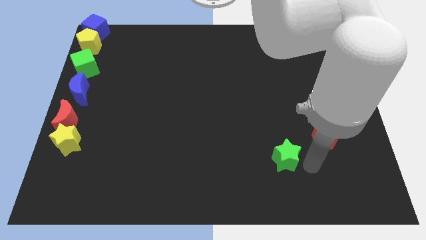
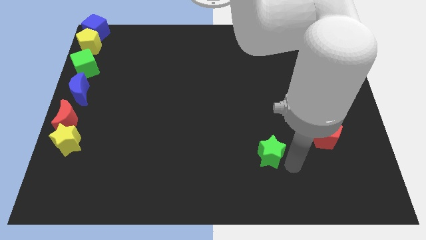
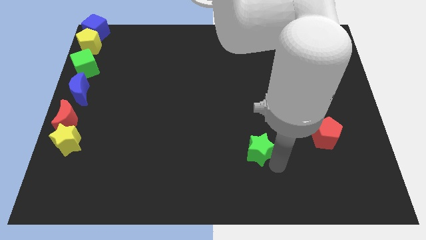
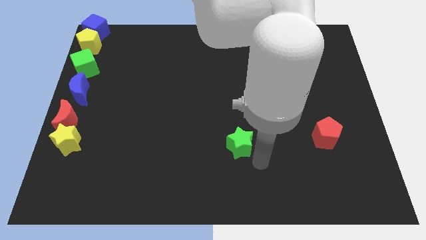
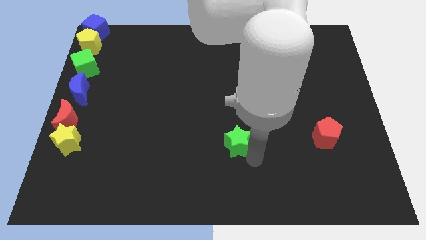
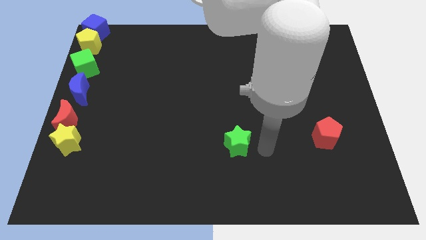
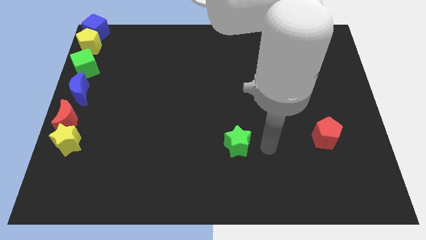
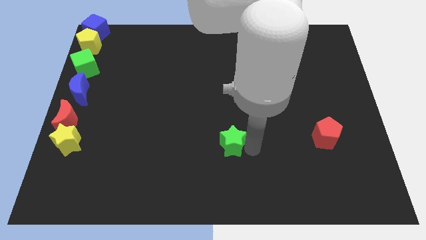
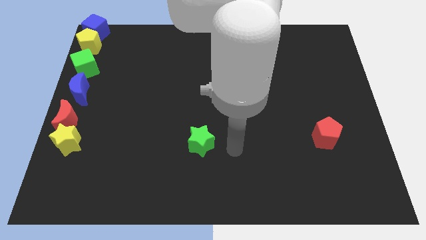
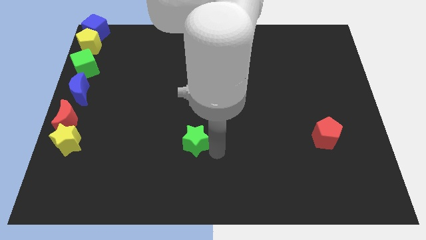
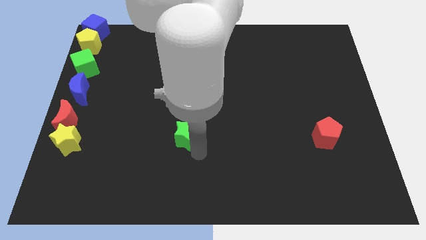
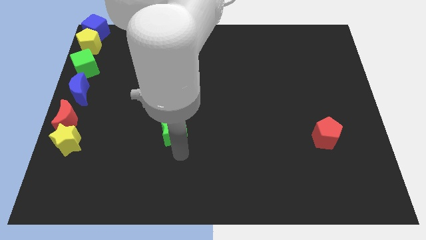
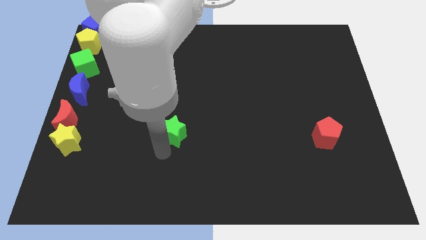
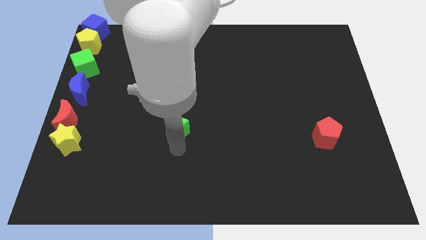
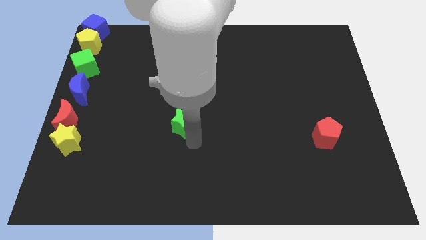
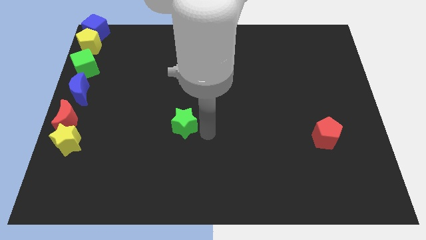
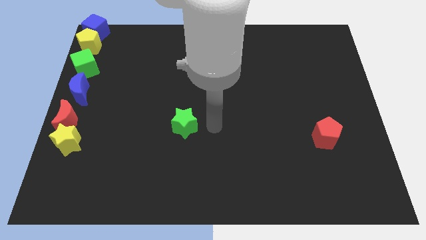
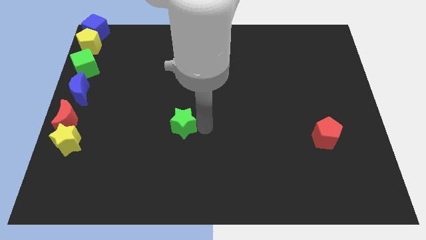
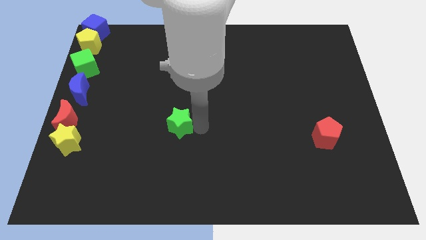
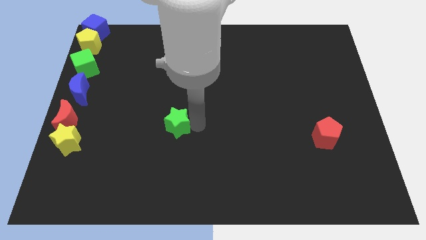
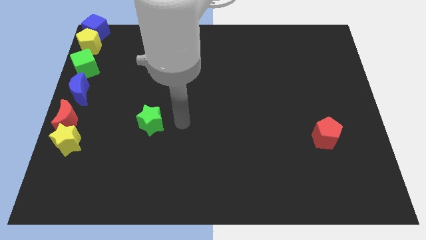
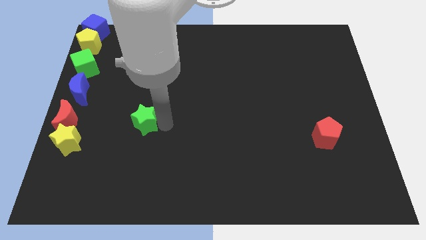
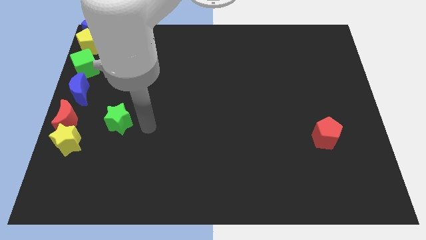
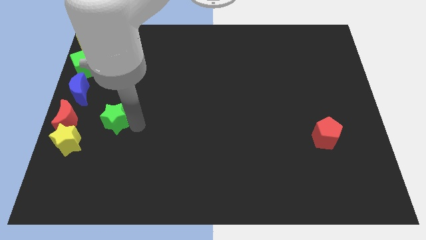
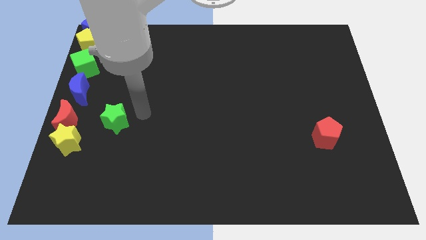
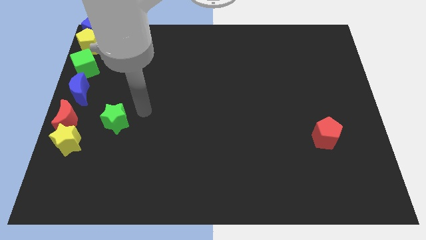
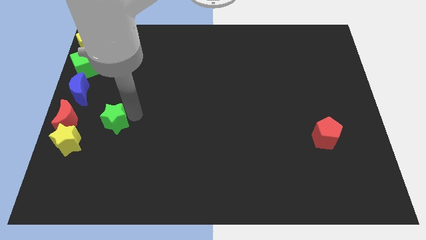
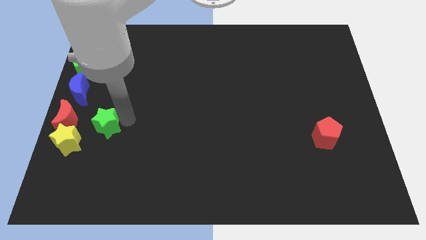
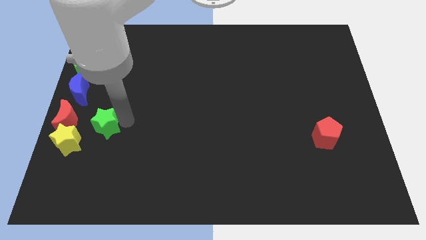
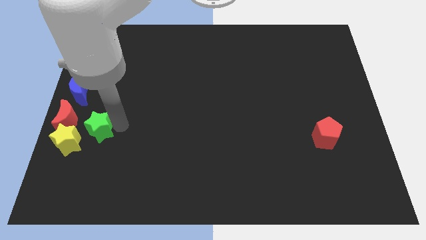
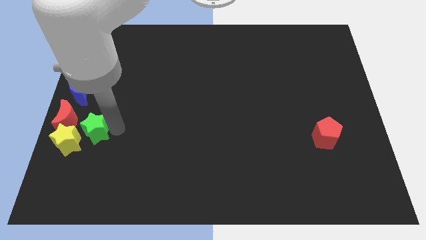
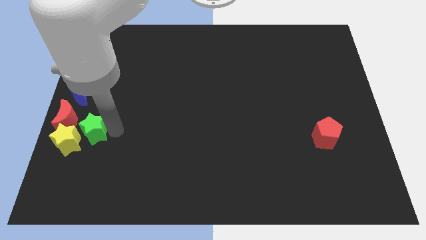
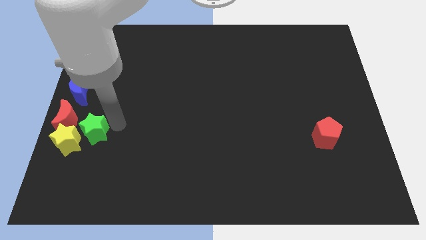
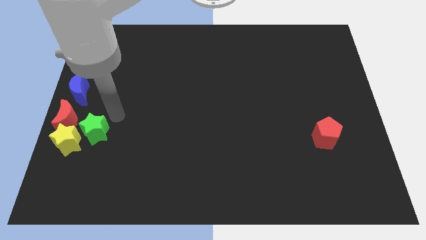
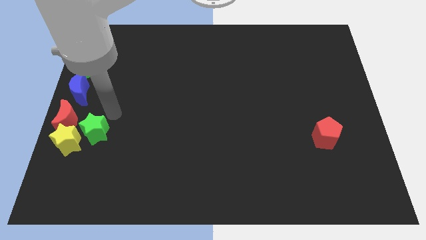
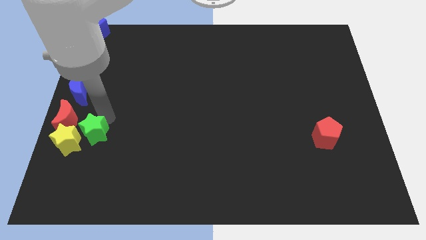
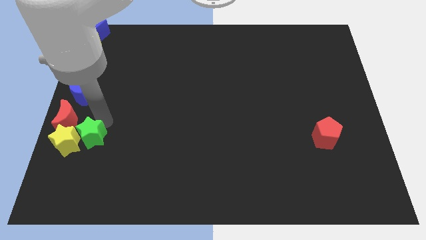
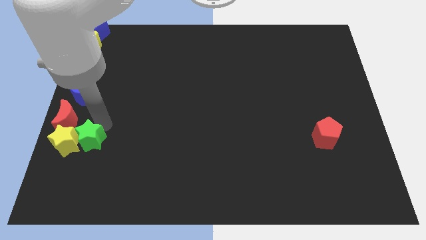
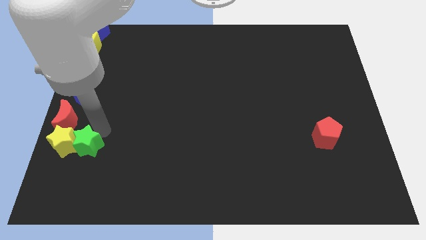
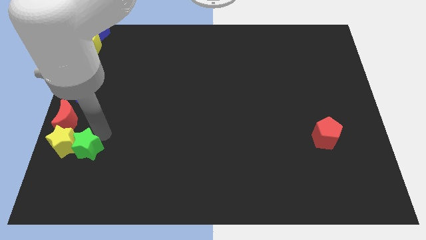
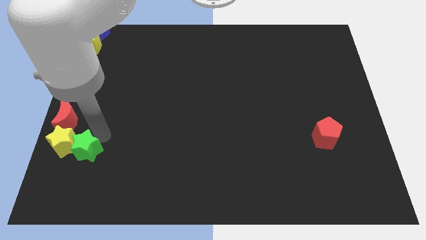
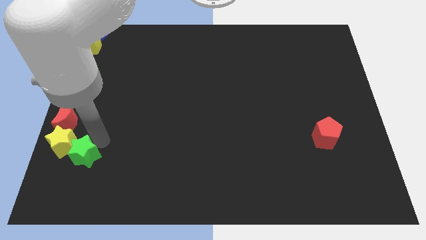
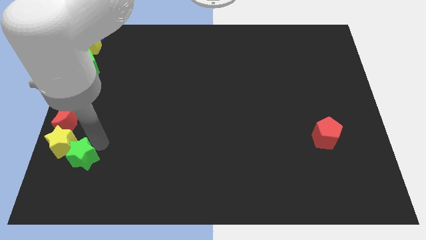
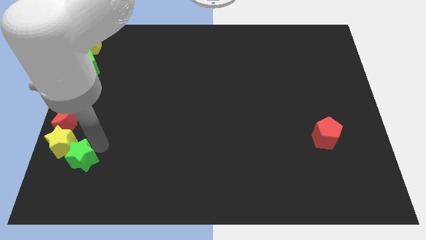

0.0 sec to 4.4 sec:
move the green star to the bottom right of the yellow star

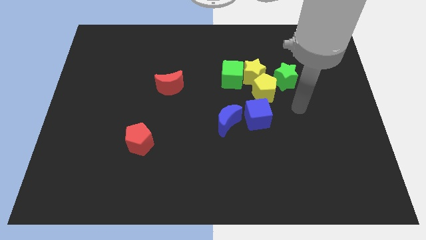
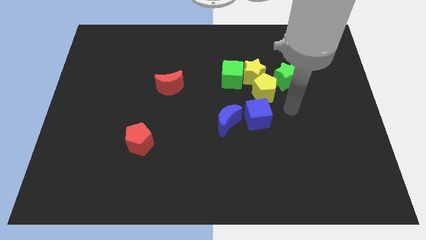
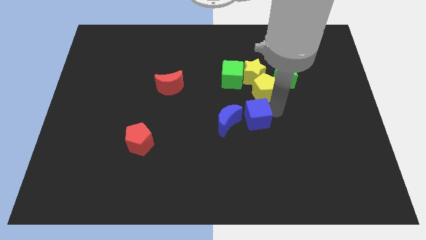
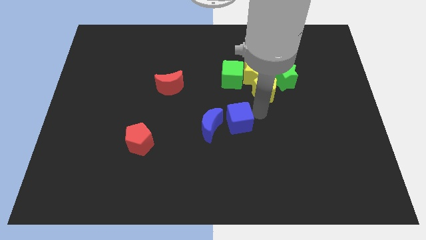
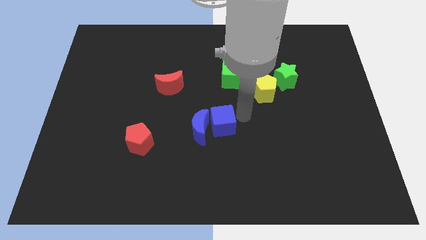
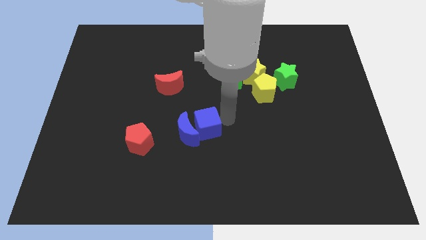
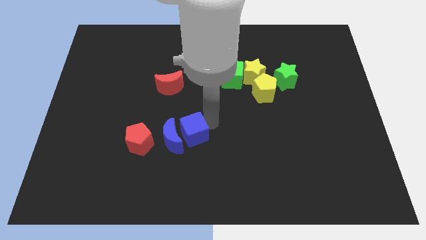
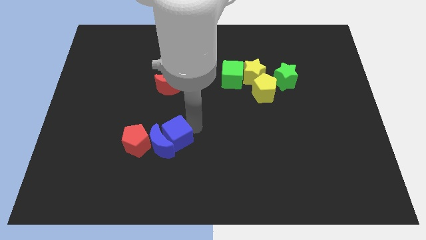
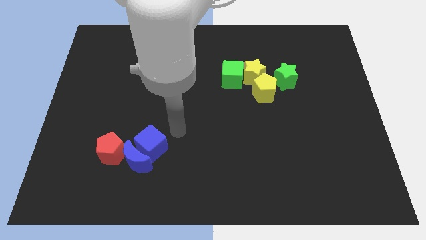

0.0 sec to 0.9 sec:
place blue blocks below red crescent

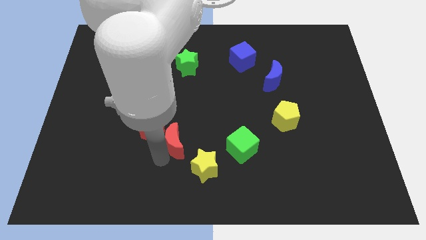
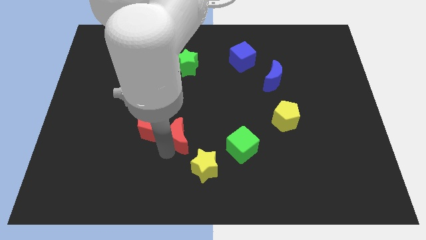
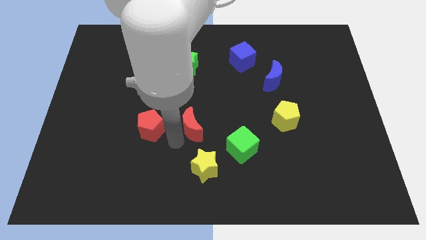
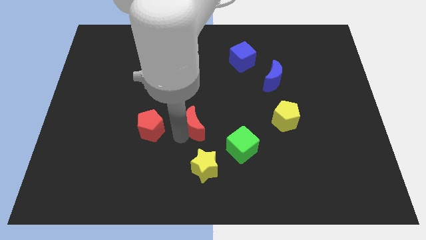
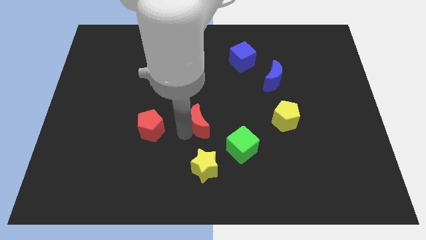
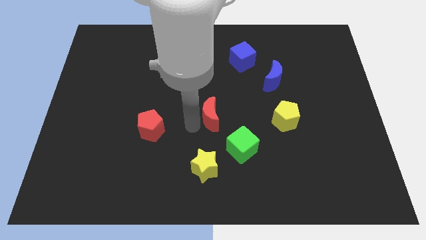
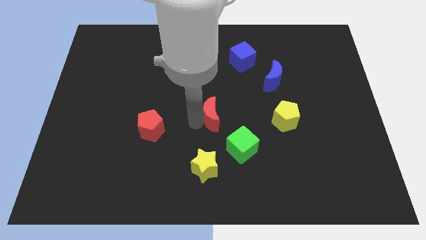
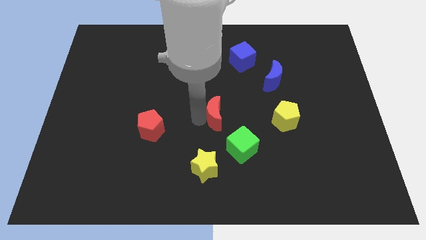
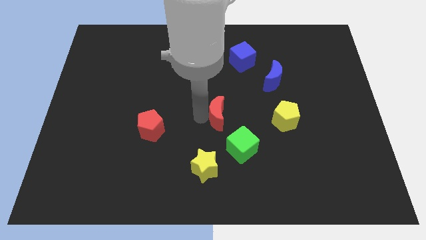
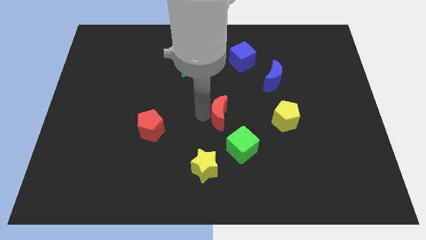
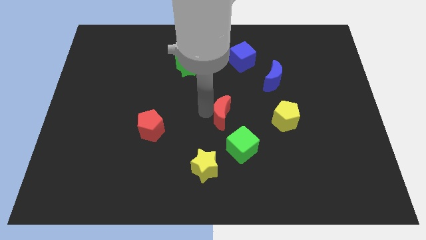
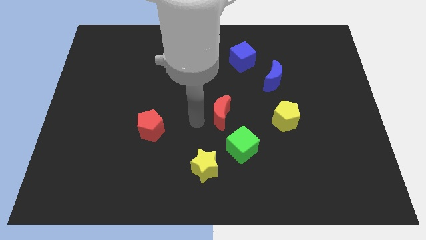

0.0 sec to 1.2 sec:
place the red crescent in between the green star and the green cube

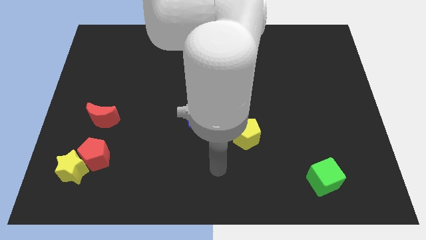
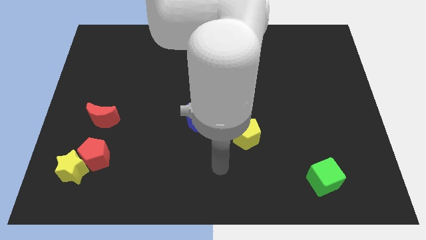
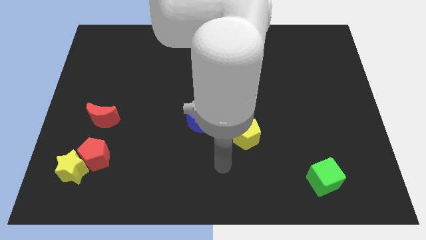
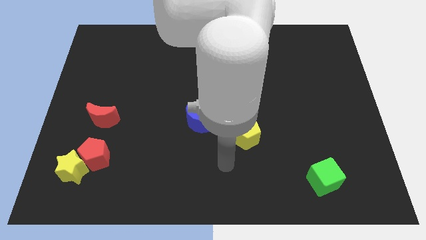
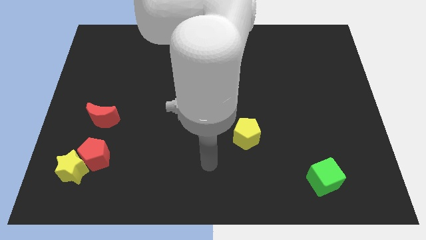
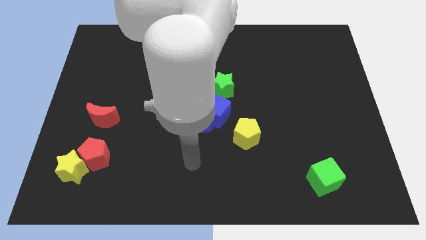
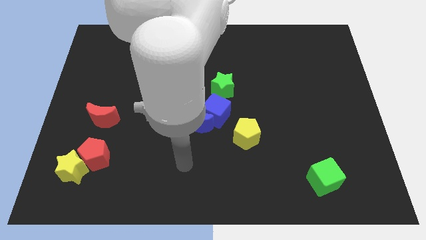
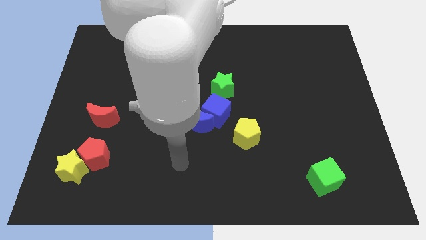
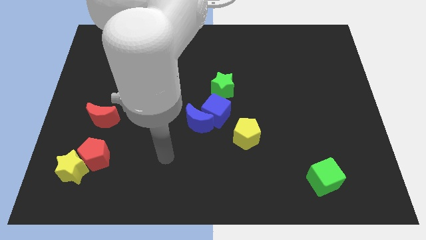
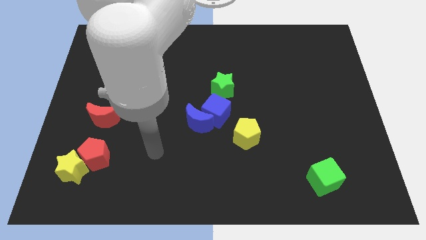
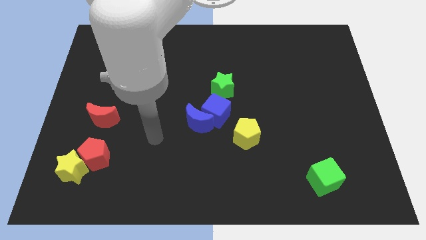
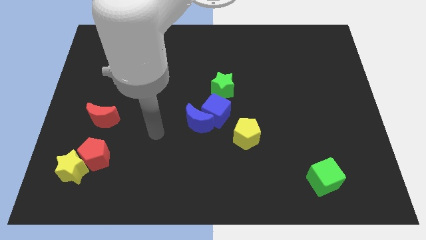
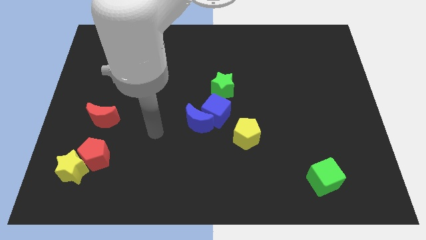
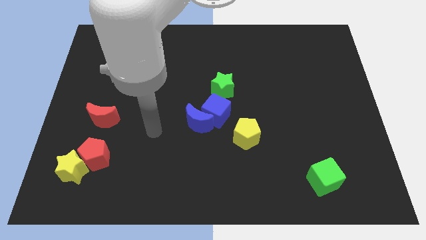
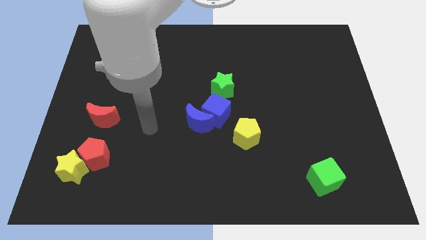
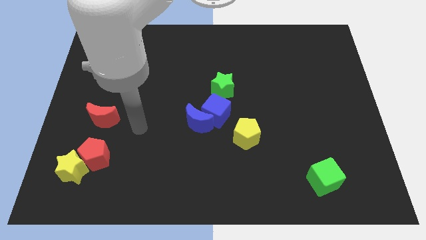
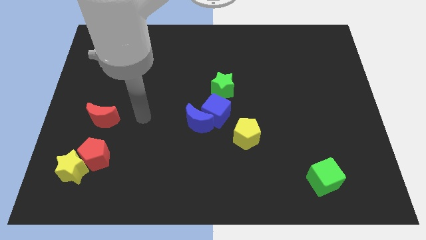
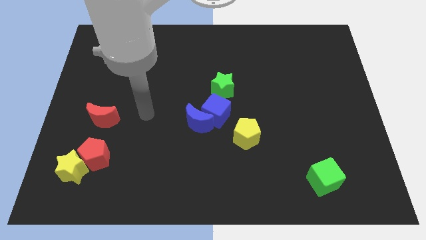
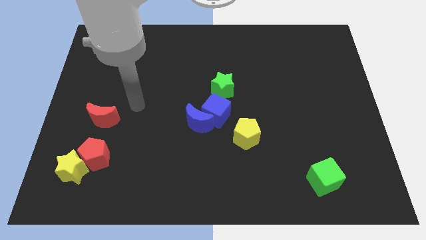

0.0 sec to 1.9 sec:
place your arm to the right side of the red moon

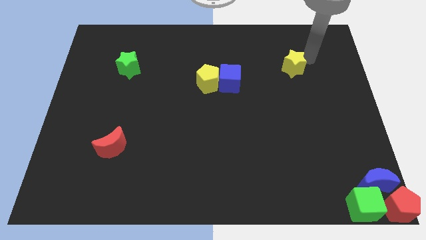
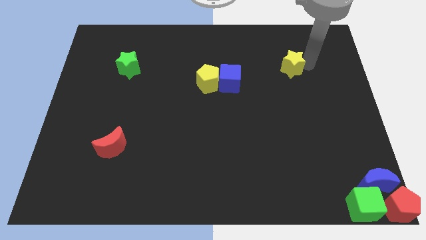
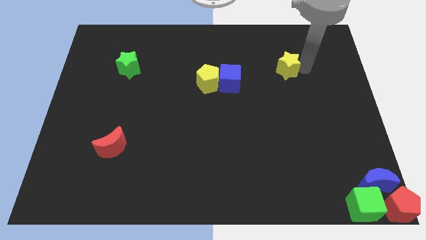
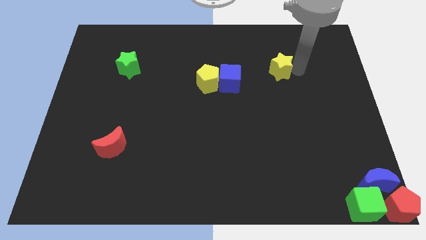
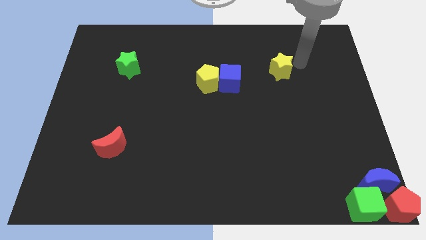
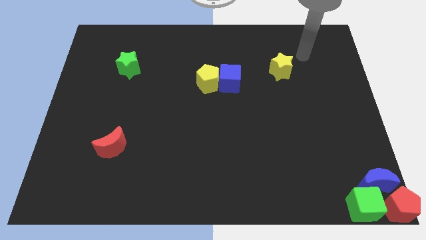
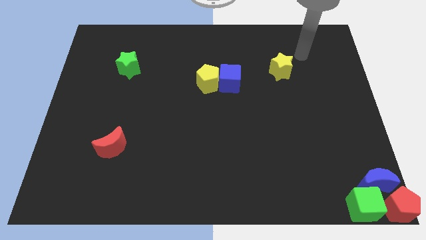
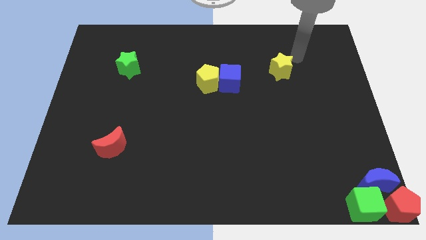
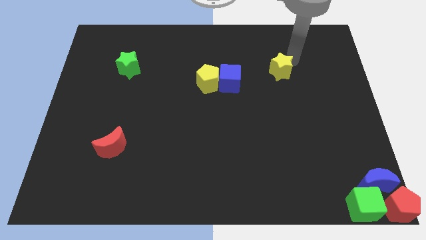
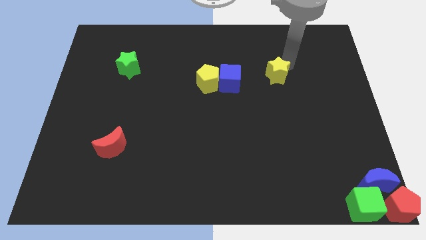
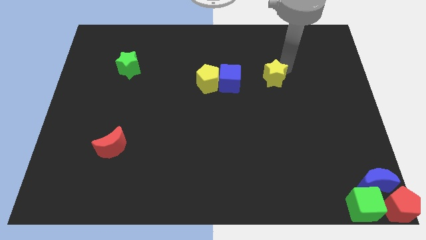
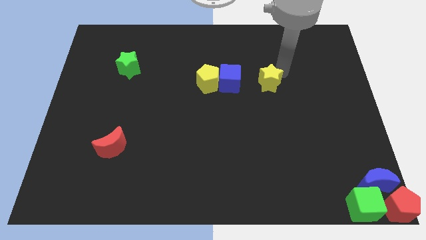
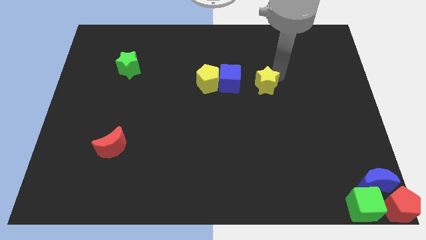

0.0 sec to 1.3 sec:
place the yellow star to the right of the blue cube
